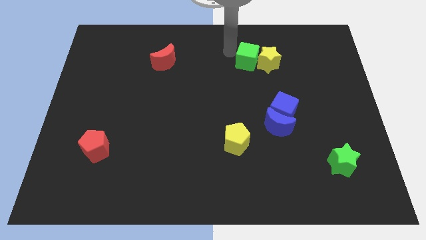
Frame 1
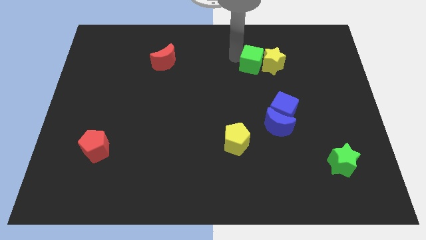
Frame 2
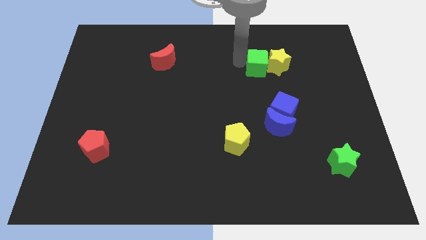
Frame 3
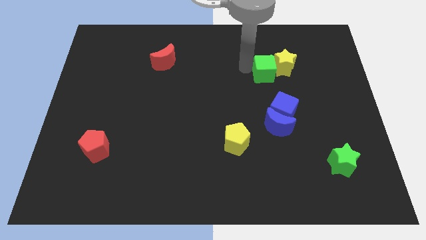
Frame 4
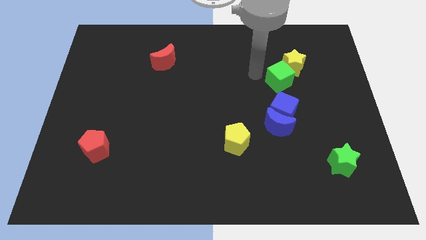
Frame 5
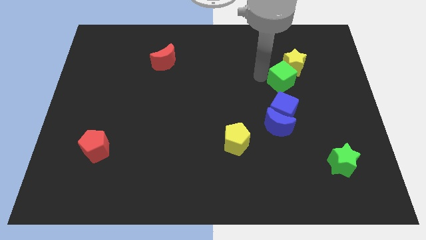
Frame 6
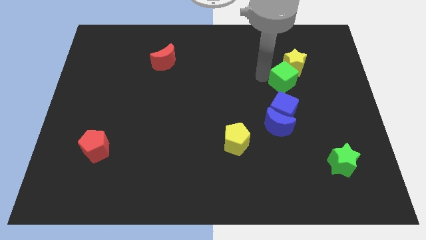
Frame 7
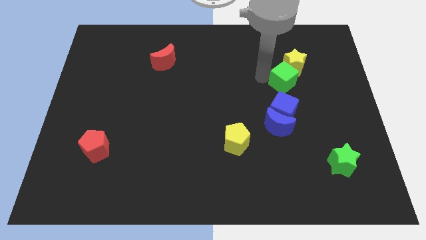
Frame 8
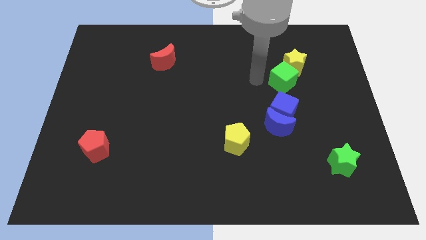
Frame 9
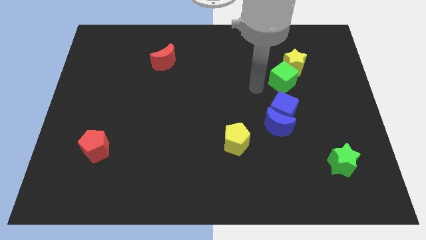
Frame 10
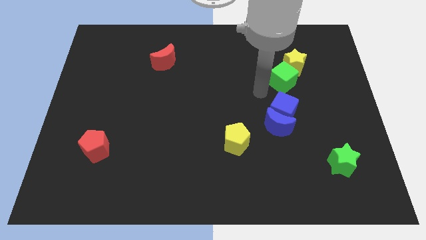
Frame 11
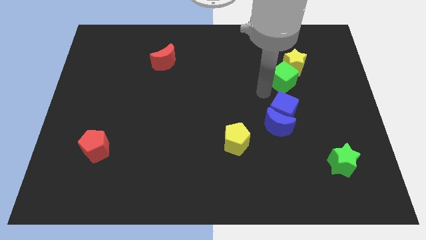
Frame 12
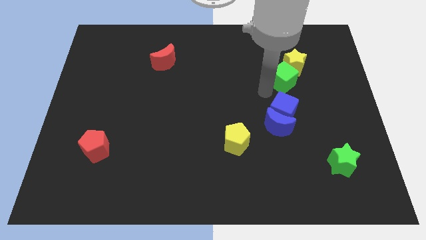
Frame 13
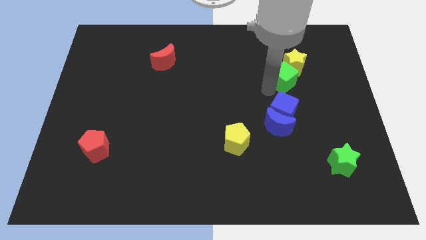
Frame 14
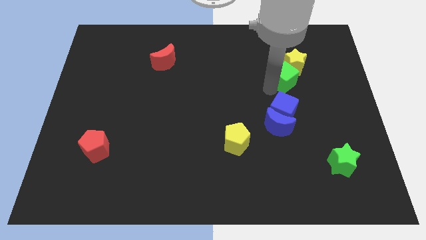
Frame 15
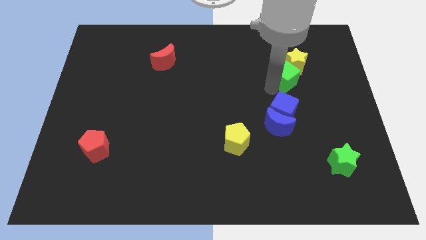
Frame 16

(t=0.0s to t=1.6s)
push the green cube to the top of the blue cube

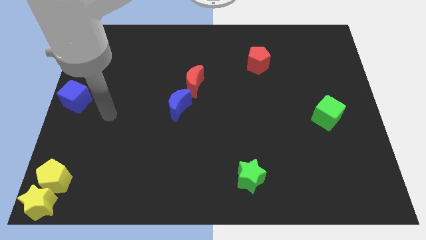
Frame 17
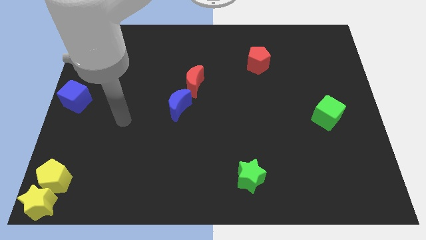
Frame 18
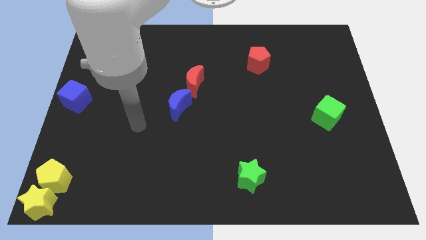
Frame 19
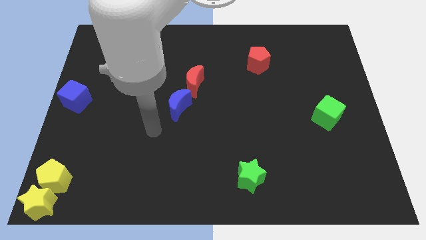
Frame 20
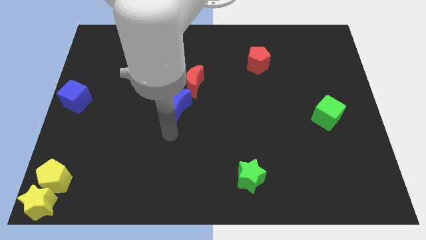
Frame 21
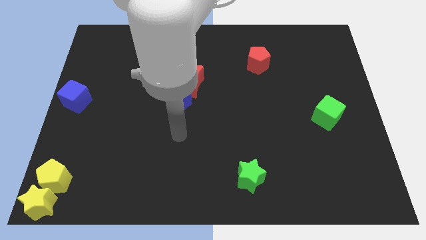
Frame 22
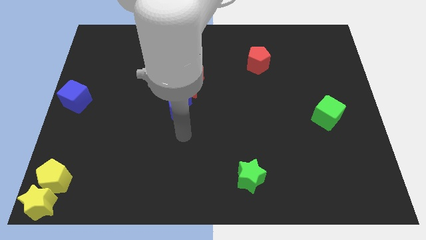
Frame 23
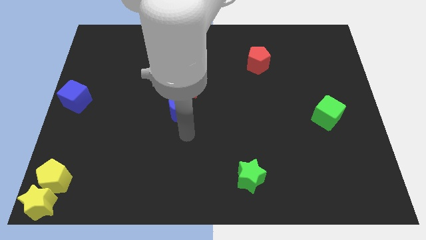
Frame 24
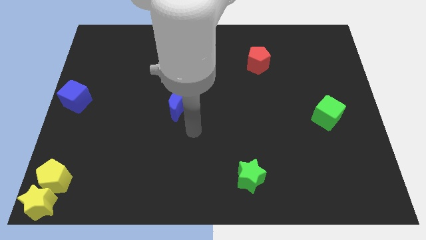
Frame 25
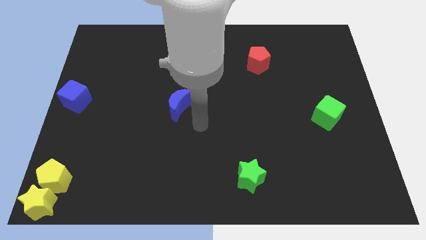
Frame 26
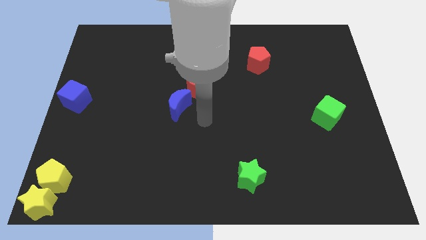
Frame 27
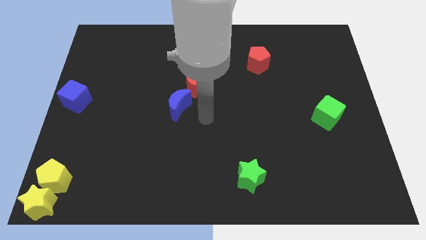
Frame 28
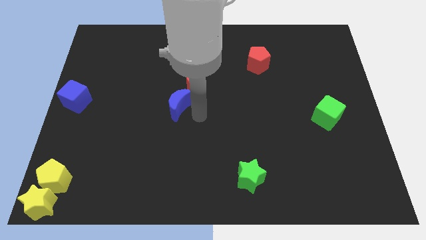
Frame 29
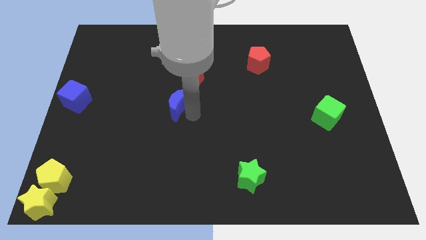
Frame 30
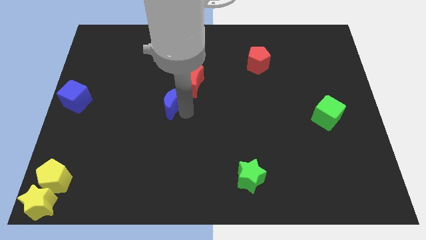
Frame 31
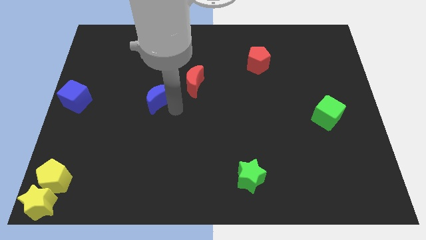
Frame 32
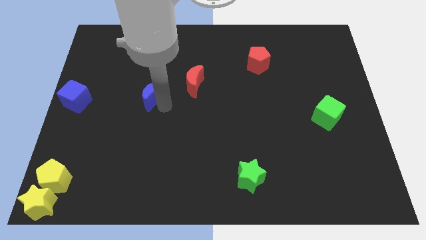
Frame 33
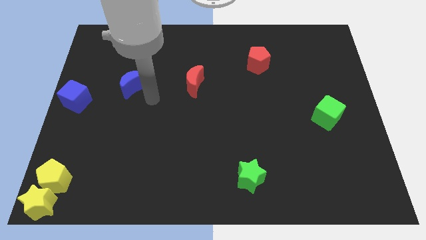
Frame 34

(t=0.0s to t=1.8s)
place the blue crescent in between the red crescent and blue cube

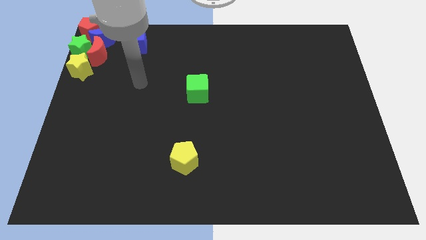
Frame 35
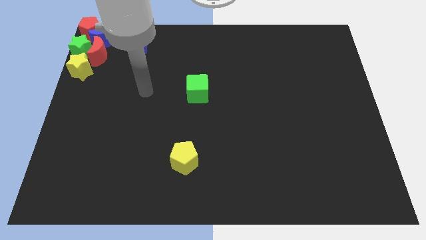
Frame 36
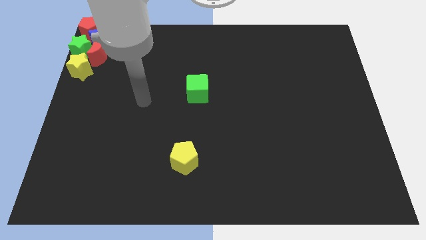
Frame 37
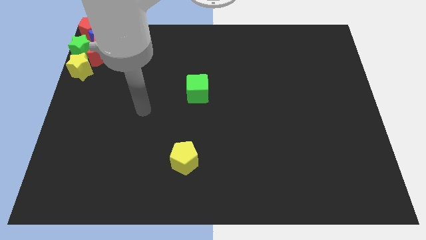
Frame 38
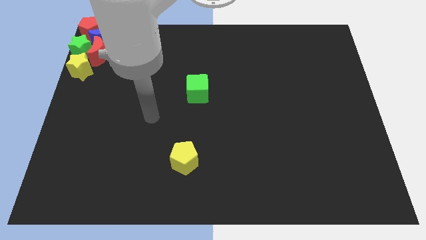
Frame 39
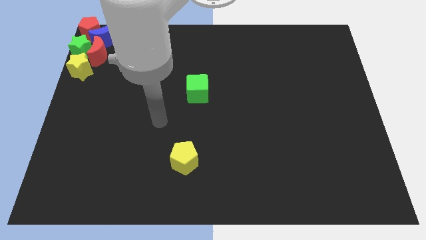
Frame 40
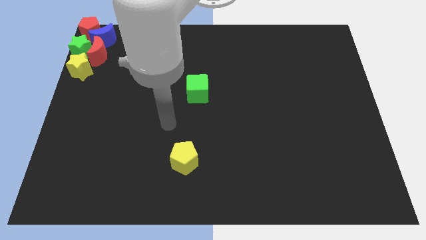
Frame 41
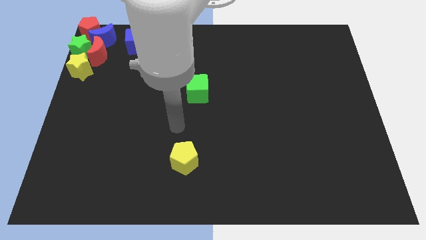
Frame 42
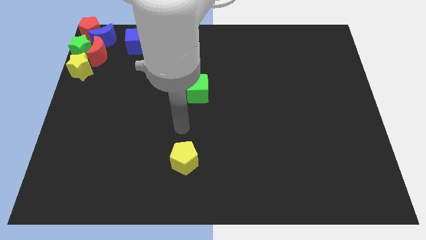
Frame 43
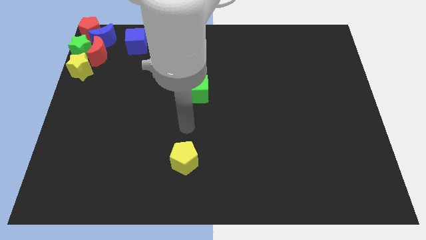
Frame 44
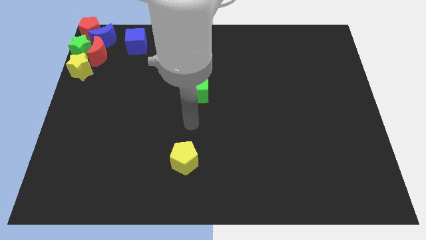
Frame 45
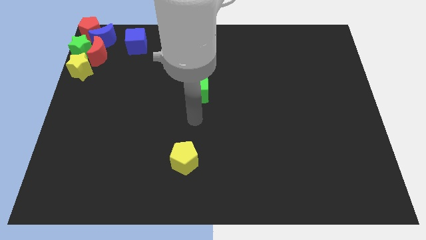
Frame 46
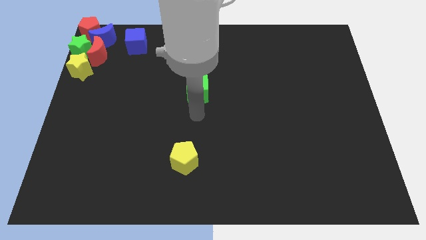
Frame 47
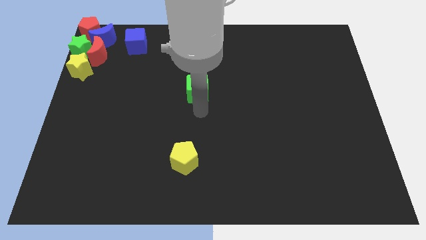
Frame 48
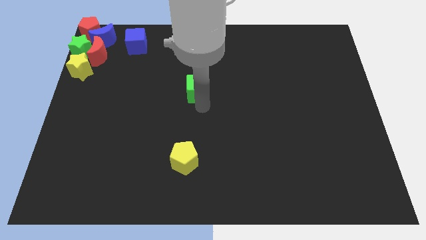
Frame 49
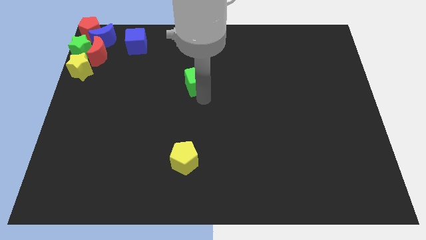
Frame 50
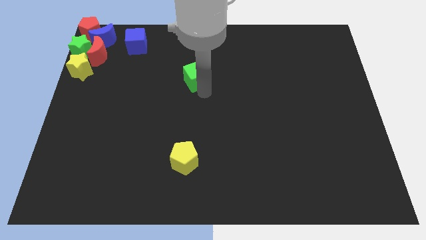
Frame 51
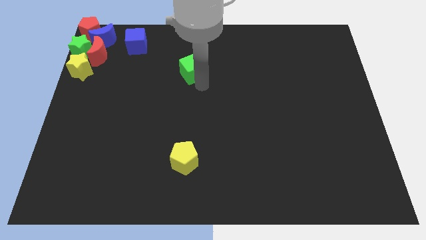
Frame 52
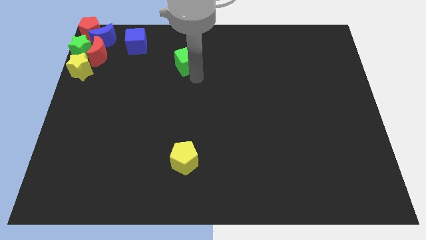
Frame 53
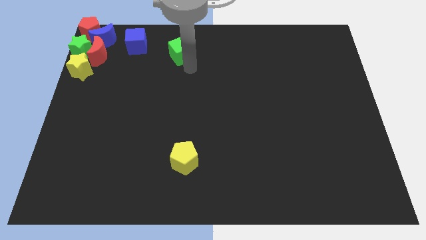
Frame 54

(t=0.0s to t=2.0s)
slide the green cube to the top side of the board

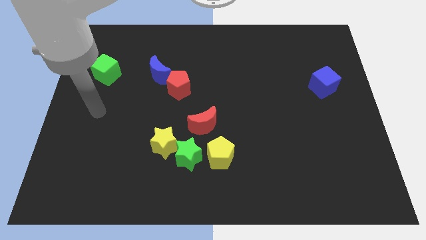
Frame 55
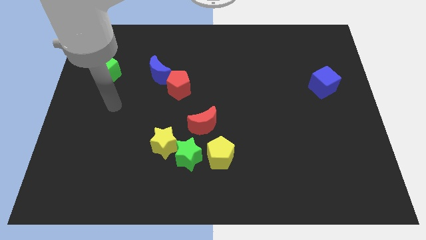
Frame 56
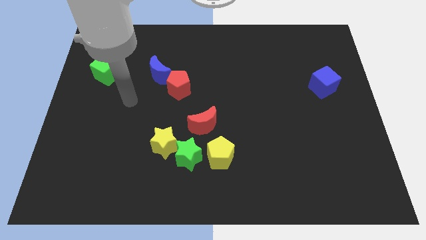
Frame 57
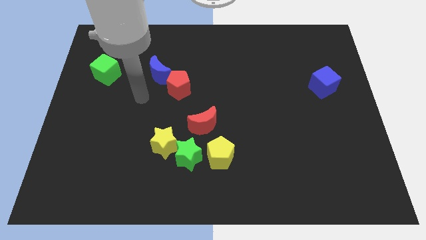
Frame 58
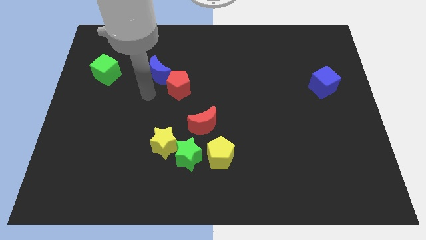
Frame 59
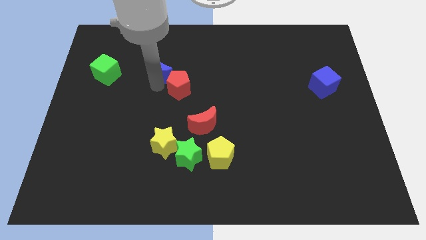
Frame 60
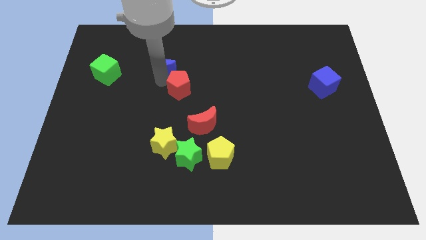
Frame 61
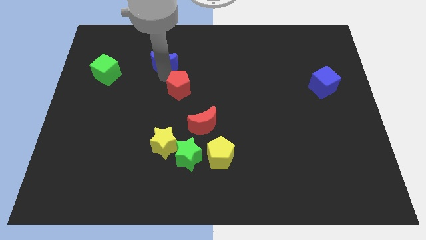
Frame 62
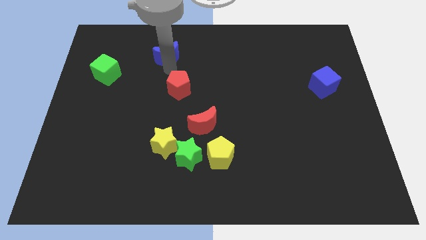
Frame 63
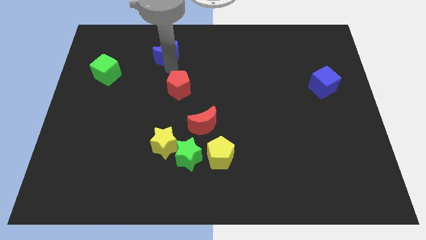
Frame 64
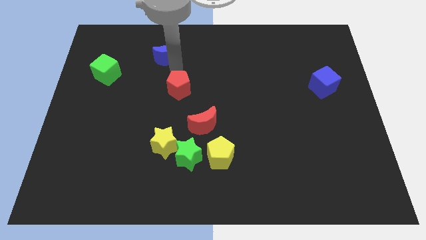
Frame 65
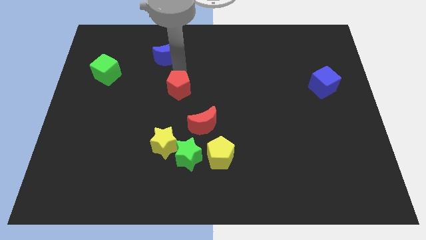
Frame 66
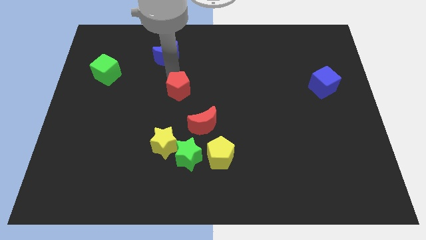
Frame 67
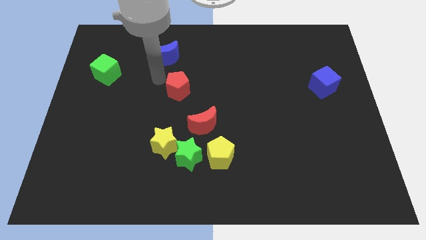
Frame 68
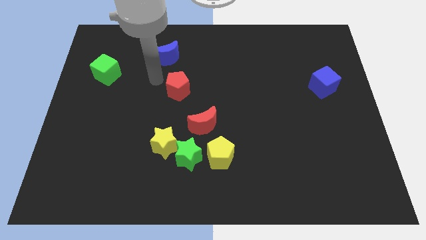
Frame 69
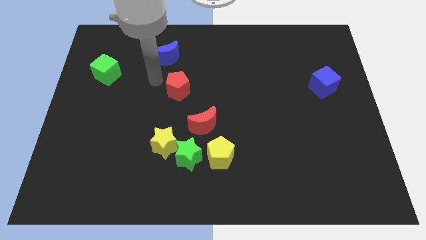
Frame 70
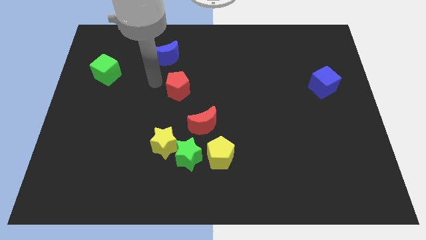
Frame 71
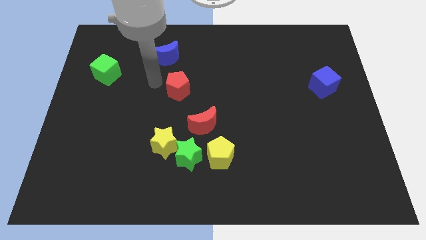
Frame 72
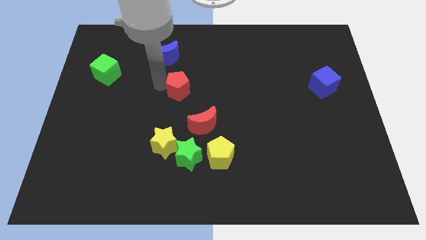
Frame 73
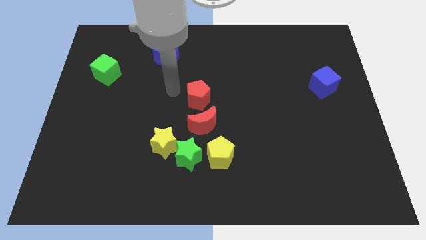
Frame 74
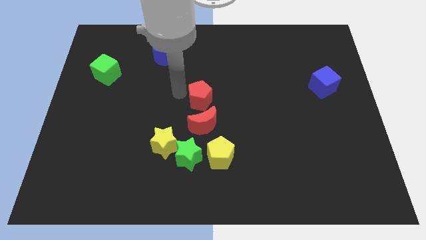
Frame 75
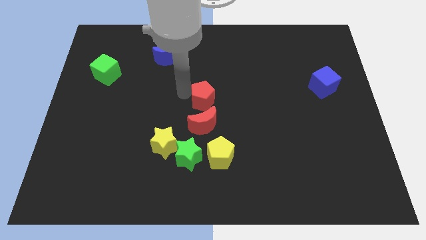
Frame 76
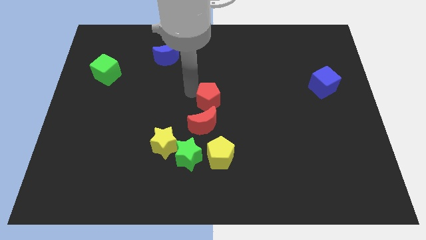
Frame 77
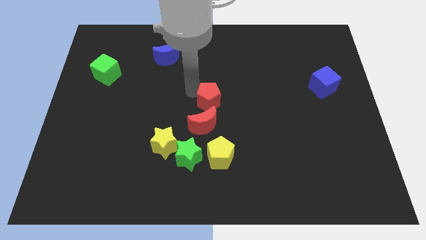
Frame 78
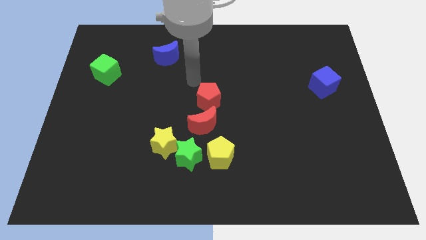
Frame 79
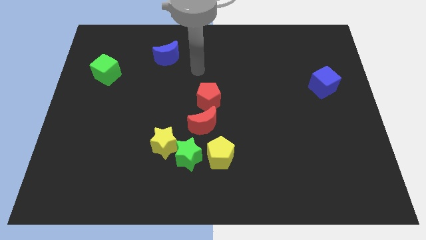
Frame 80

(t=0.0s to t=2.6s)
move the red pentagon to the top of the red crescent

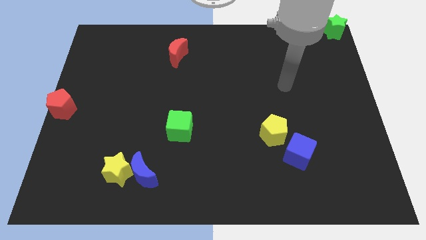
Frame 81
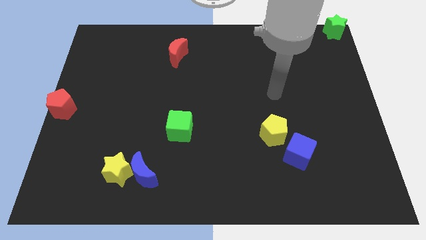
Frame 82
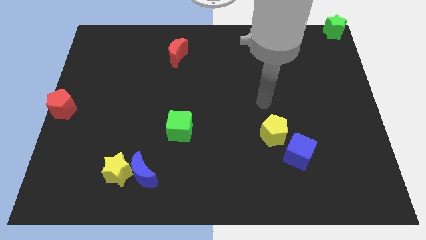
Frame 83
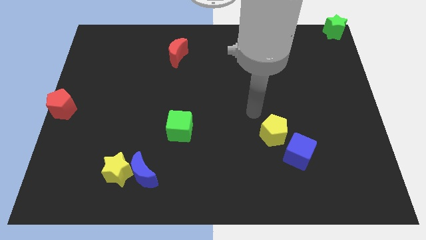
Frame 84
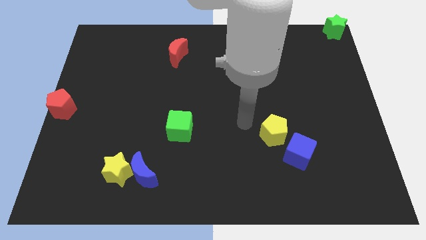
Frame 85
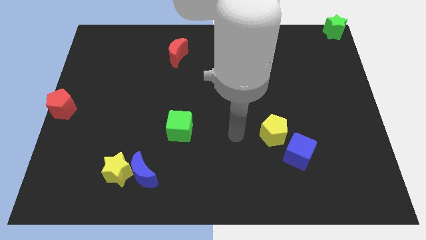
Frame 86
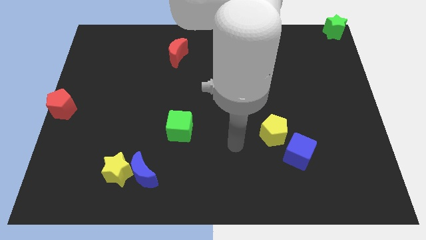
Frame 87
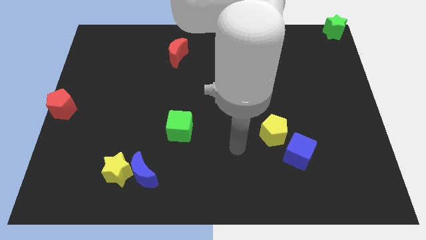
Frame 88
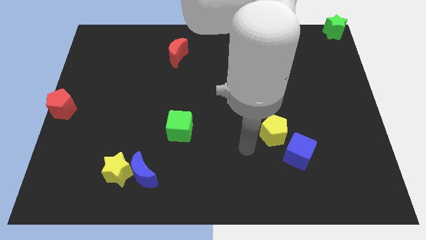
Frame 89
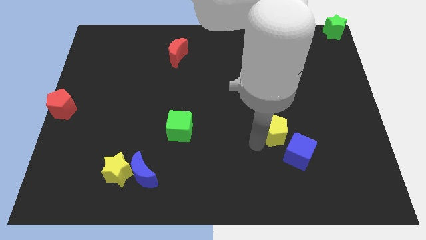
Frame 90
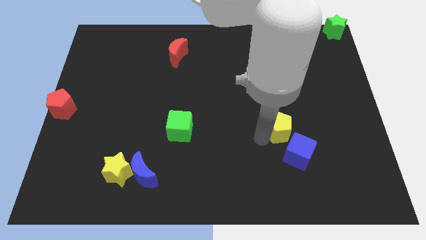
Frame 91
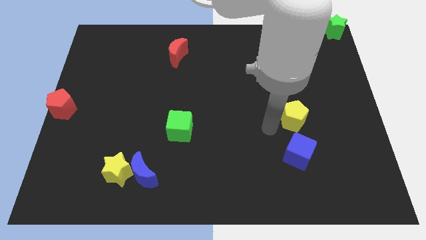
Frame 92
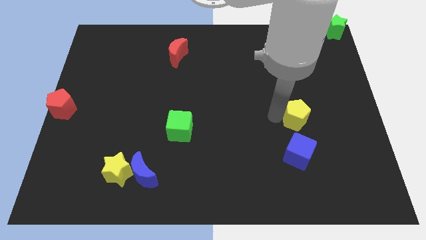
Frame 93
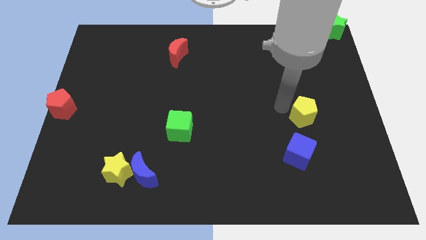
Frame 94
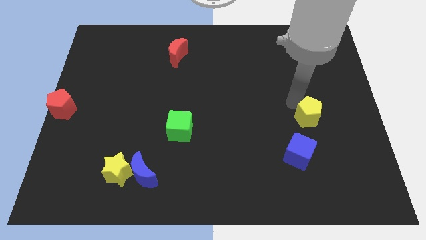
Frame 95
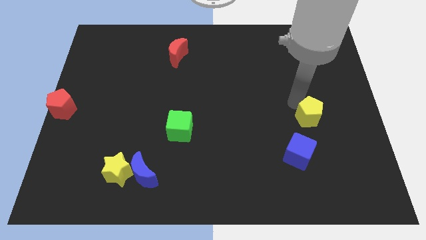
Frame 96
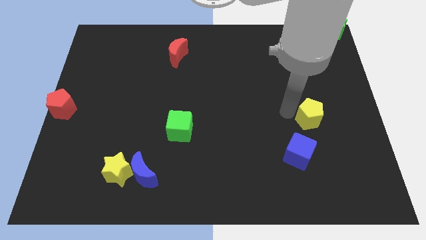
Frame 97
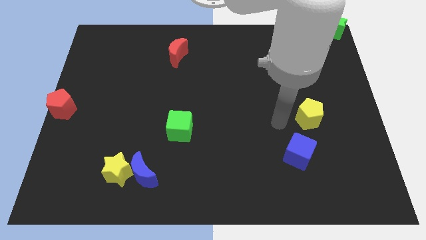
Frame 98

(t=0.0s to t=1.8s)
place the yellow pentagon above the blue cube
